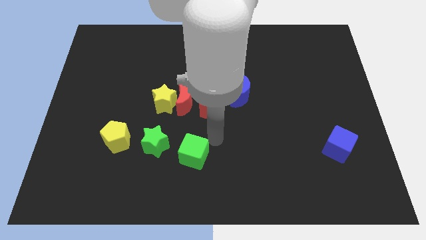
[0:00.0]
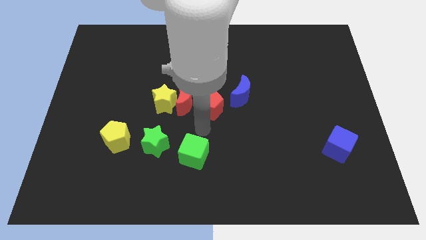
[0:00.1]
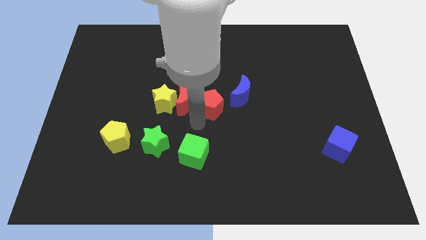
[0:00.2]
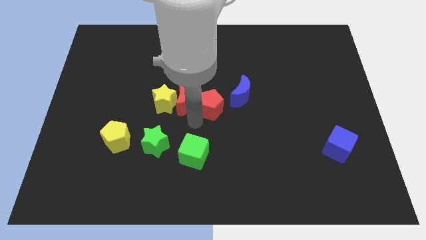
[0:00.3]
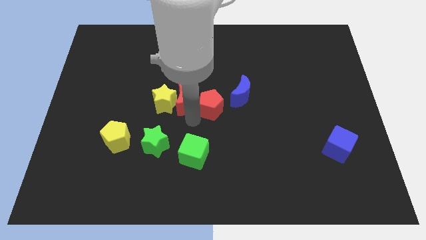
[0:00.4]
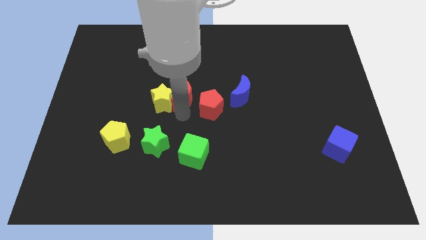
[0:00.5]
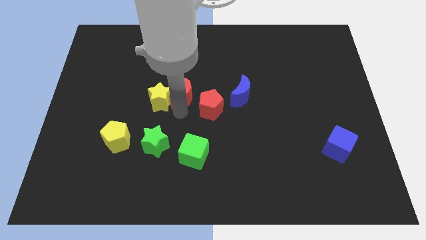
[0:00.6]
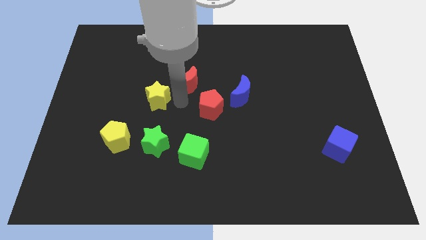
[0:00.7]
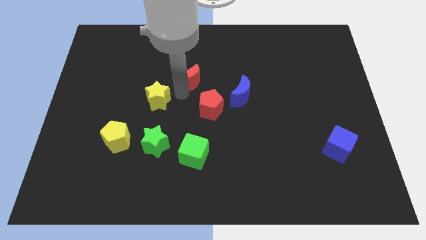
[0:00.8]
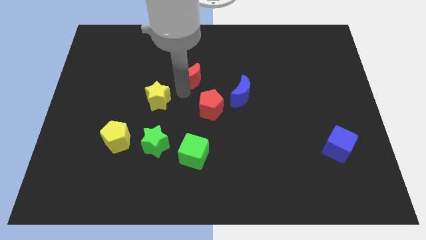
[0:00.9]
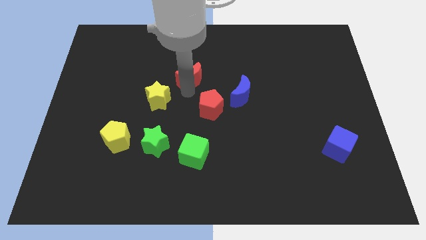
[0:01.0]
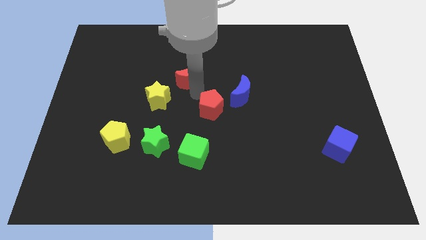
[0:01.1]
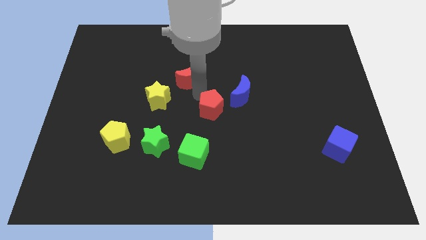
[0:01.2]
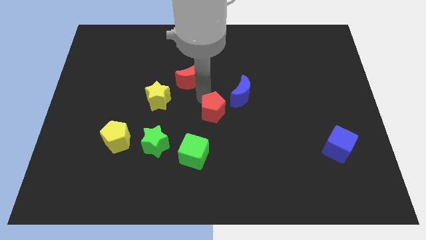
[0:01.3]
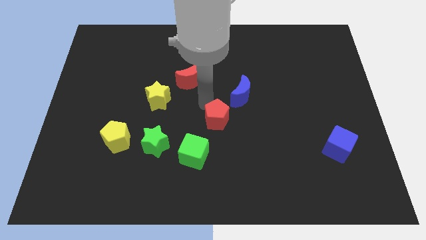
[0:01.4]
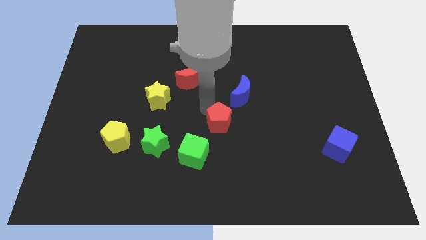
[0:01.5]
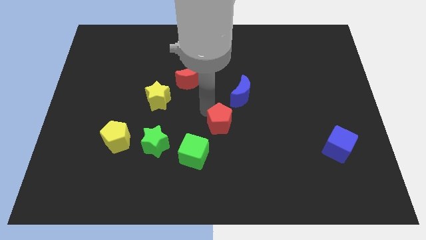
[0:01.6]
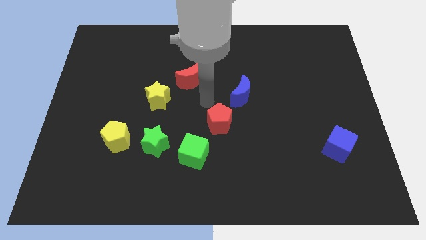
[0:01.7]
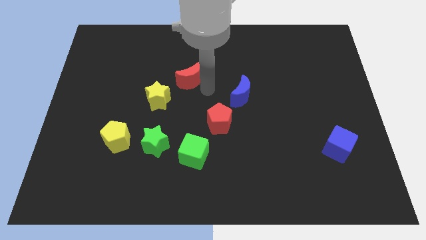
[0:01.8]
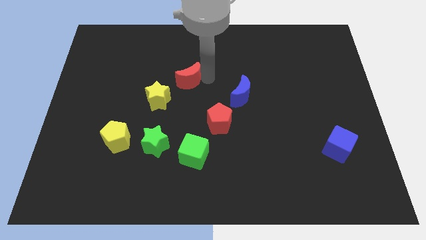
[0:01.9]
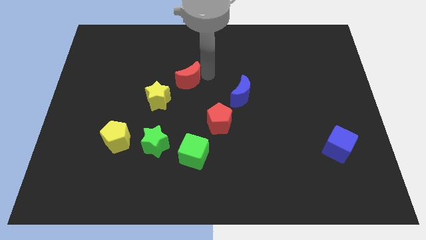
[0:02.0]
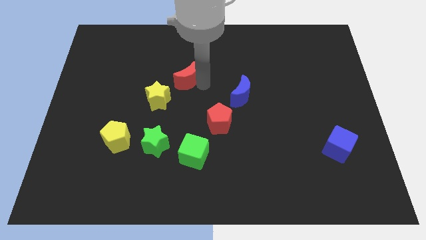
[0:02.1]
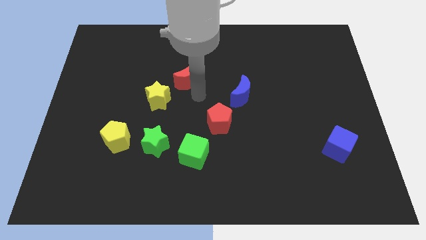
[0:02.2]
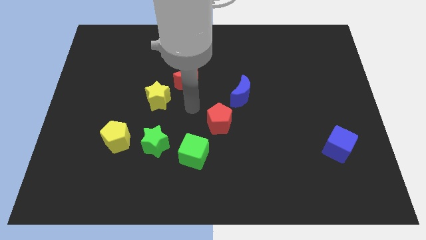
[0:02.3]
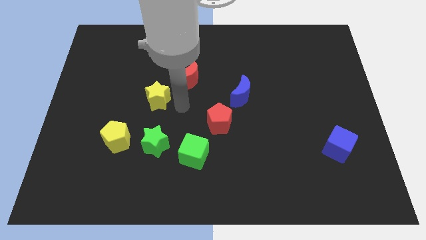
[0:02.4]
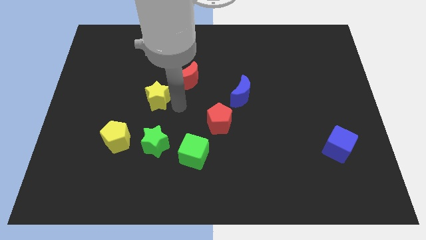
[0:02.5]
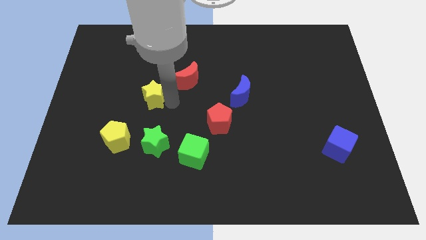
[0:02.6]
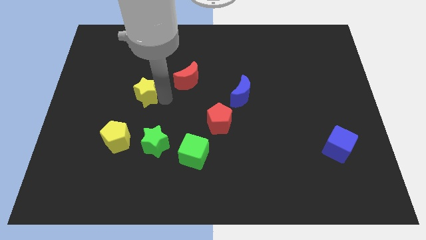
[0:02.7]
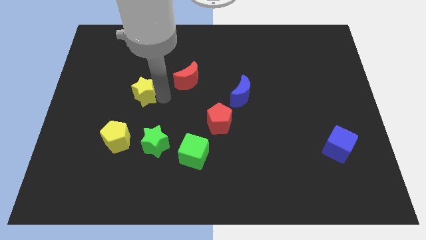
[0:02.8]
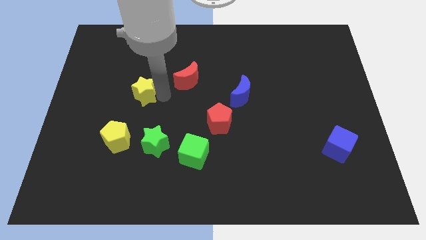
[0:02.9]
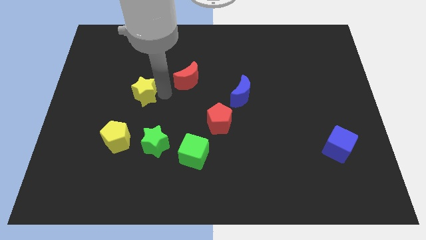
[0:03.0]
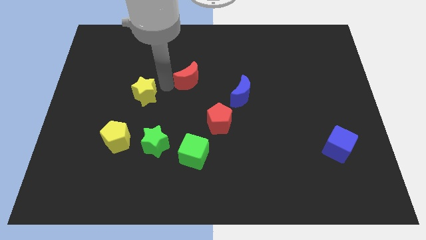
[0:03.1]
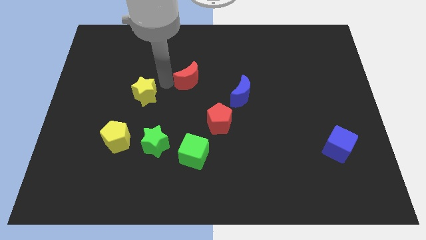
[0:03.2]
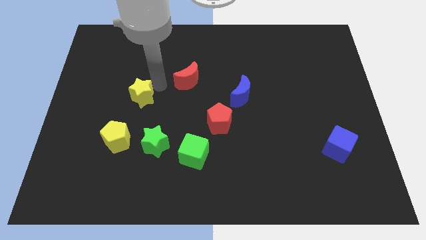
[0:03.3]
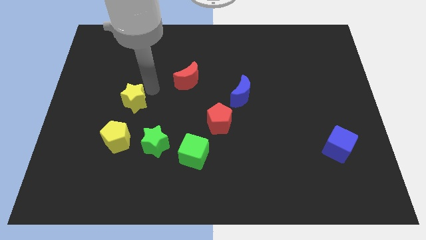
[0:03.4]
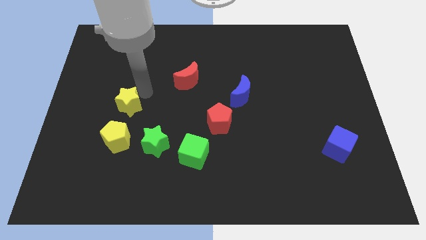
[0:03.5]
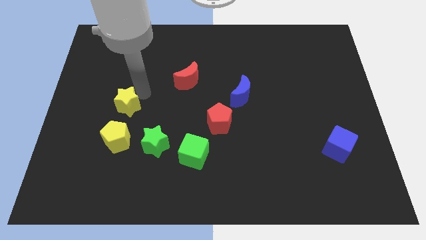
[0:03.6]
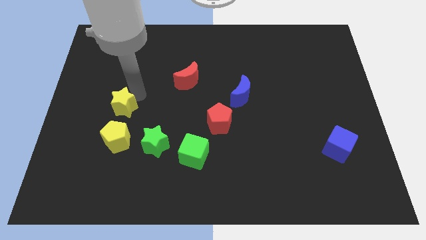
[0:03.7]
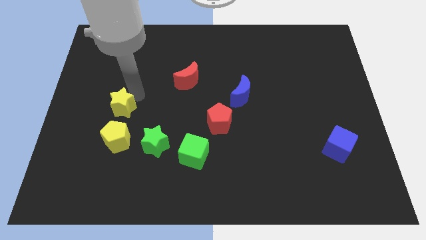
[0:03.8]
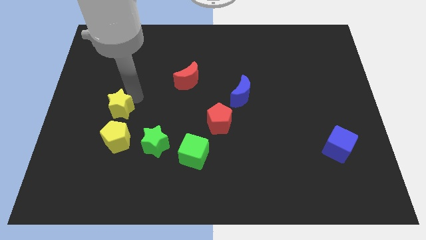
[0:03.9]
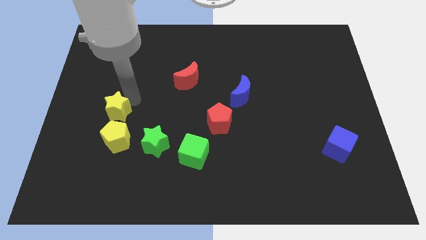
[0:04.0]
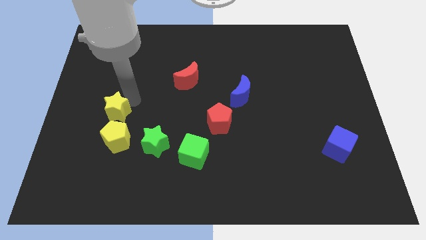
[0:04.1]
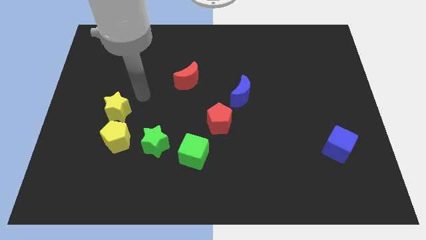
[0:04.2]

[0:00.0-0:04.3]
move the yellow star on the top of the yellow pentagon

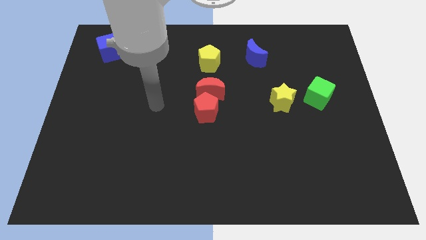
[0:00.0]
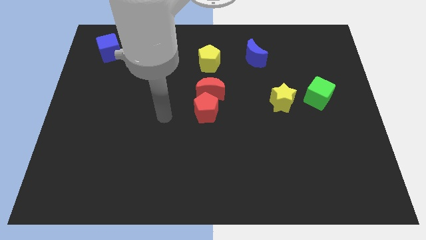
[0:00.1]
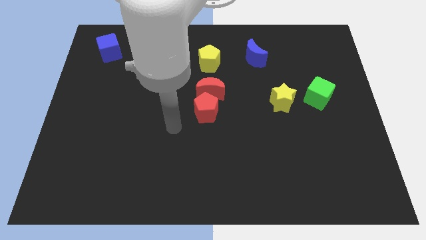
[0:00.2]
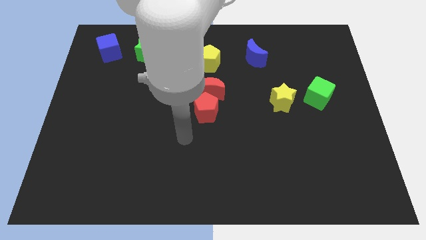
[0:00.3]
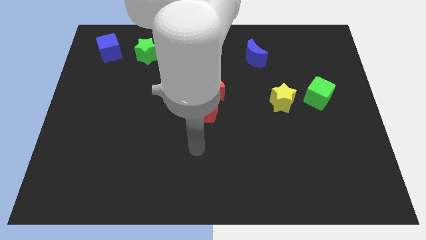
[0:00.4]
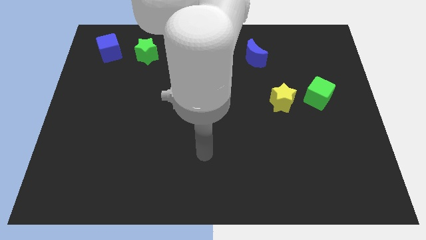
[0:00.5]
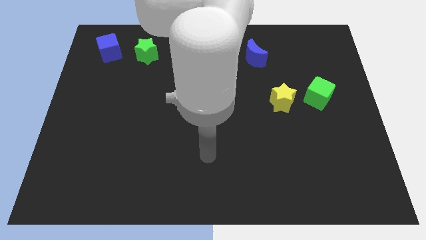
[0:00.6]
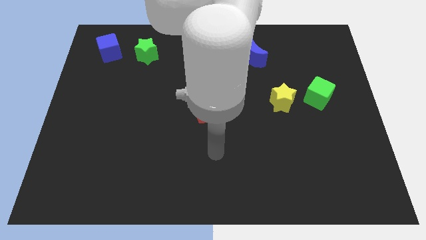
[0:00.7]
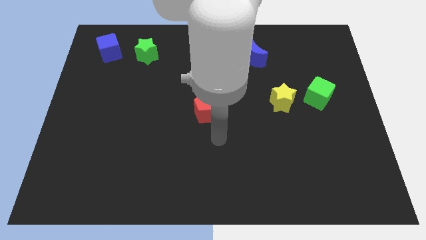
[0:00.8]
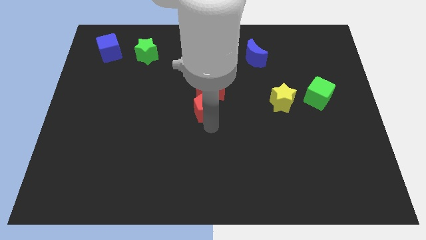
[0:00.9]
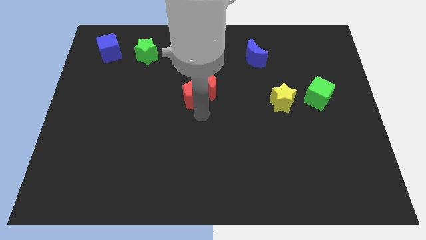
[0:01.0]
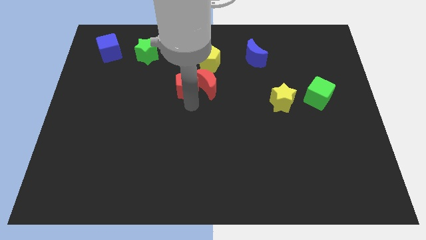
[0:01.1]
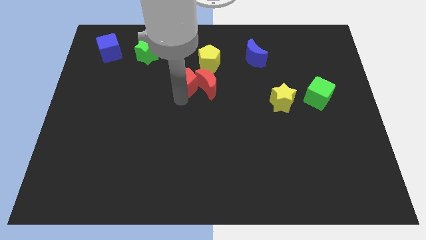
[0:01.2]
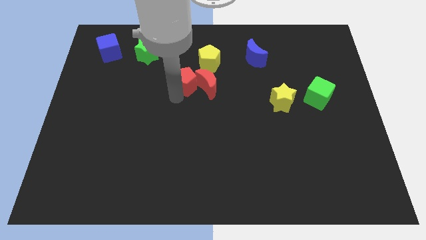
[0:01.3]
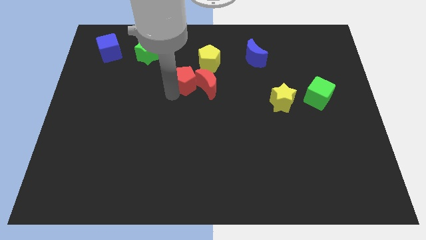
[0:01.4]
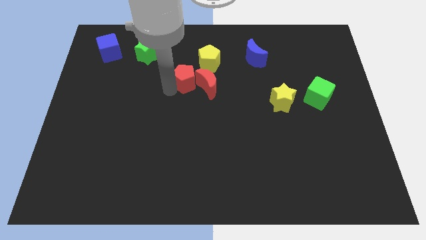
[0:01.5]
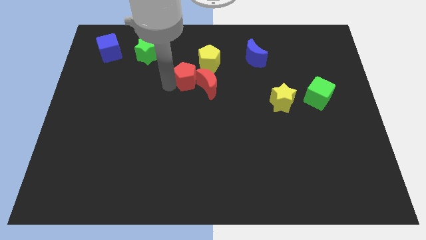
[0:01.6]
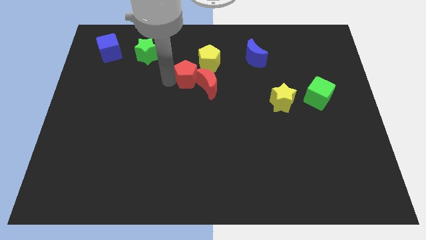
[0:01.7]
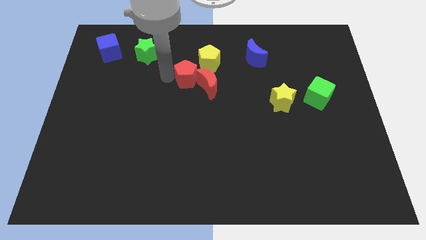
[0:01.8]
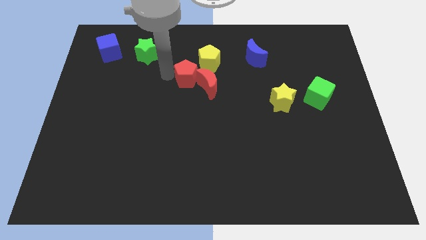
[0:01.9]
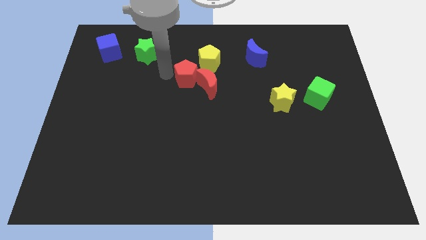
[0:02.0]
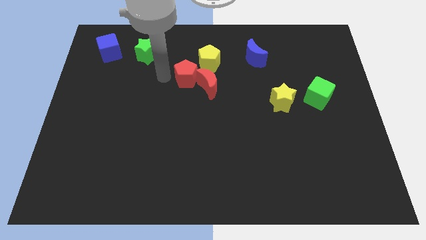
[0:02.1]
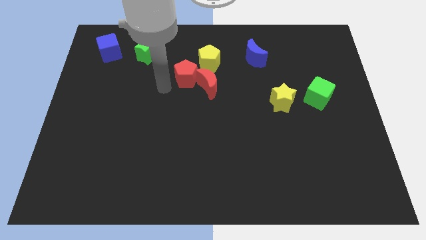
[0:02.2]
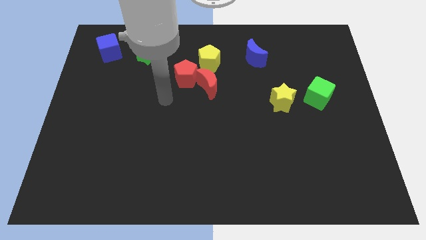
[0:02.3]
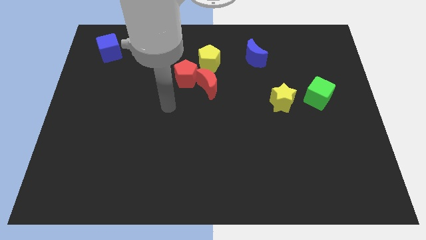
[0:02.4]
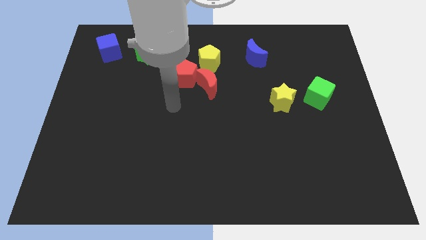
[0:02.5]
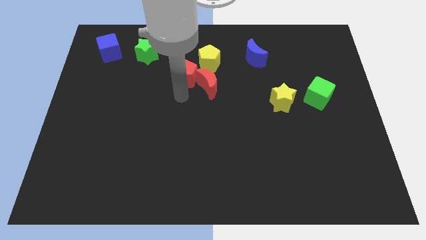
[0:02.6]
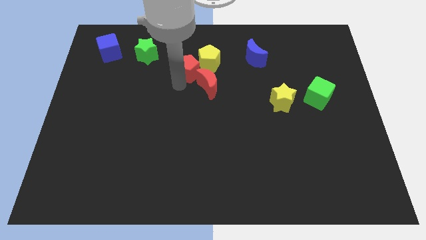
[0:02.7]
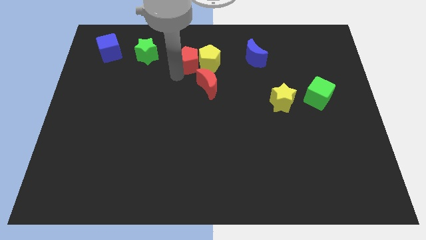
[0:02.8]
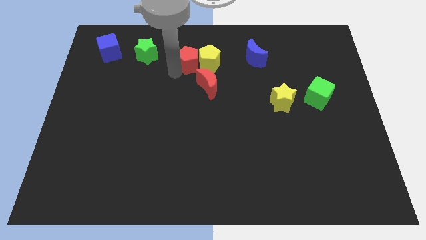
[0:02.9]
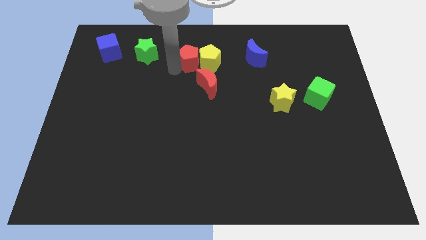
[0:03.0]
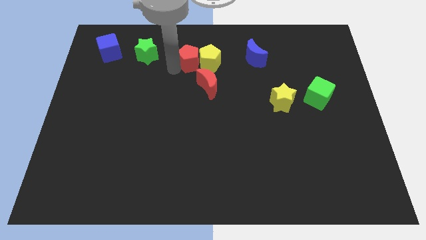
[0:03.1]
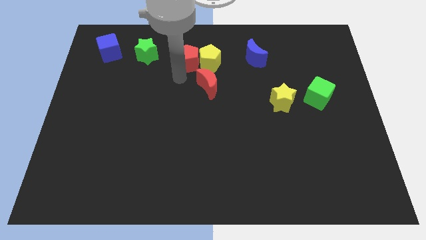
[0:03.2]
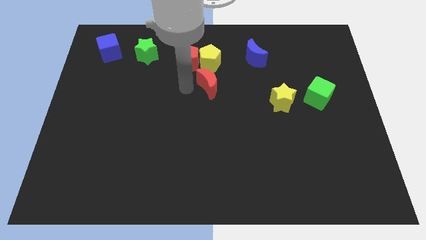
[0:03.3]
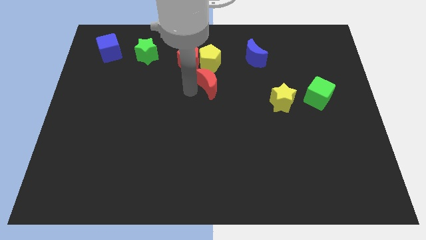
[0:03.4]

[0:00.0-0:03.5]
put the red pentagon left to the yellow pentagon

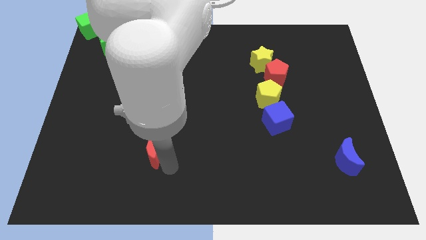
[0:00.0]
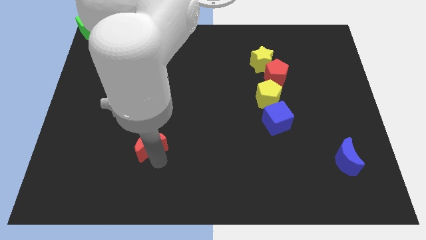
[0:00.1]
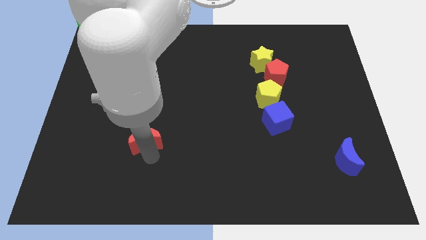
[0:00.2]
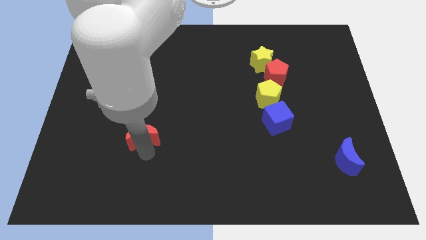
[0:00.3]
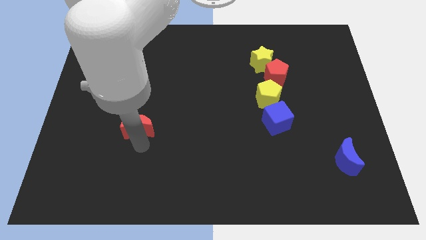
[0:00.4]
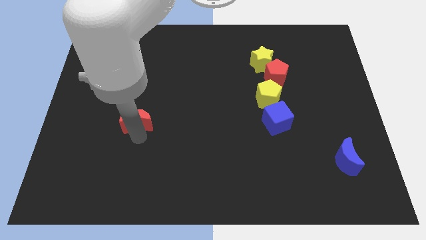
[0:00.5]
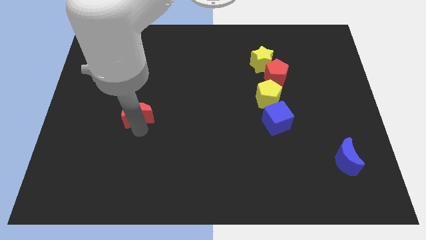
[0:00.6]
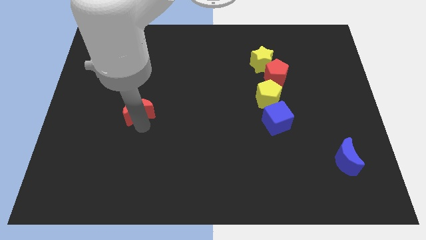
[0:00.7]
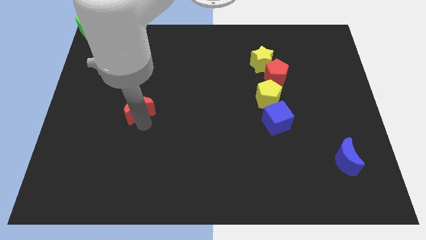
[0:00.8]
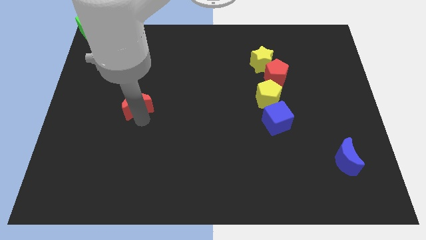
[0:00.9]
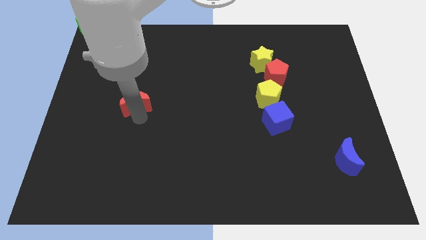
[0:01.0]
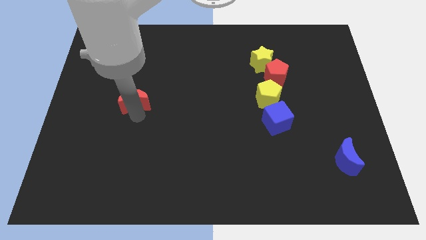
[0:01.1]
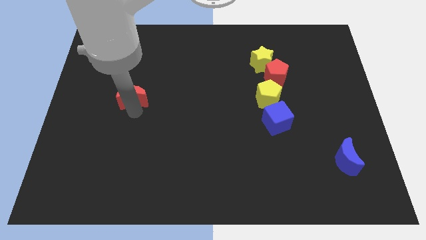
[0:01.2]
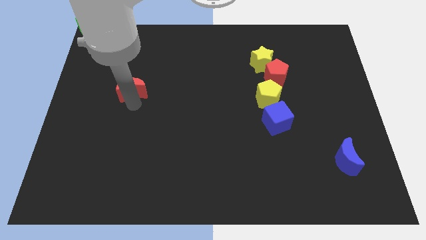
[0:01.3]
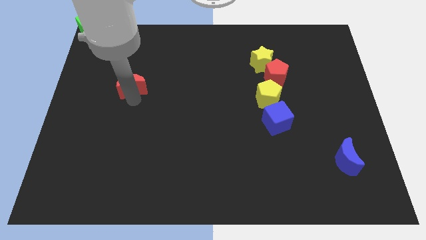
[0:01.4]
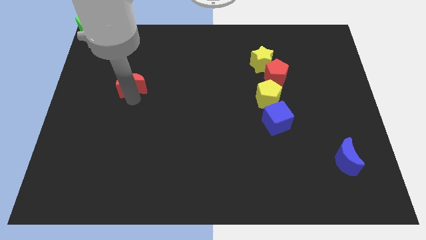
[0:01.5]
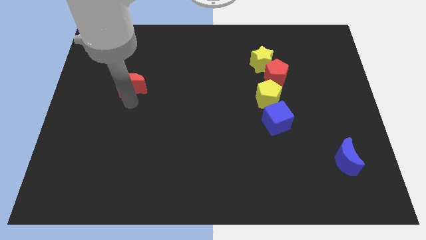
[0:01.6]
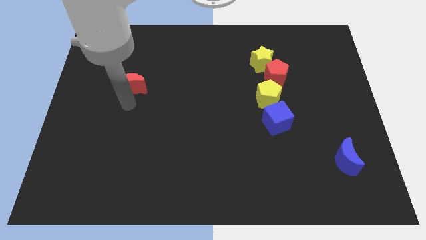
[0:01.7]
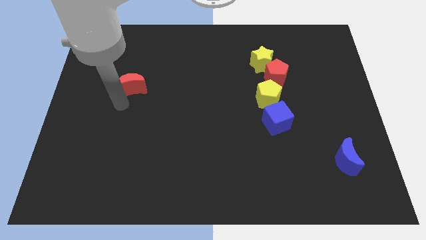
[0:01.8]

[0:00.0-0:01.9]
move the red crescent towards the top side of the board
